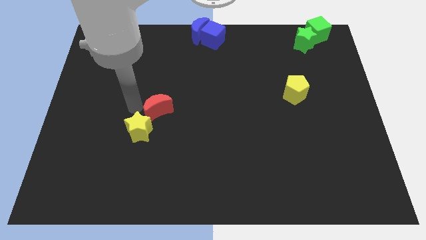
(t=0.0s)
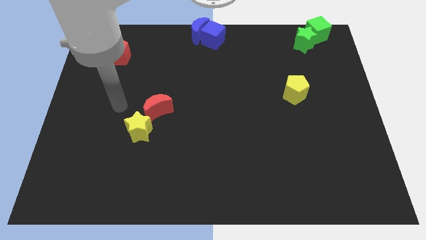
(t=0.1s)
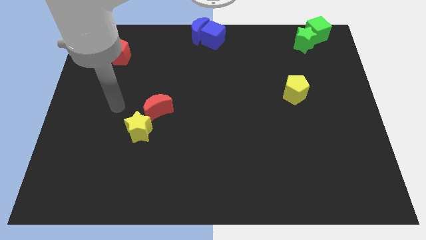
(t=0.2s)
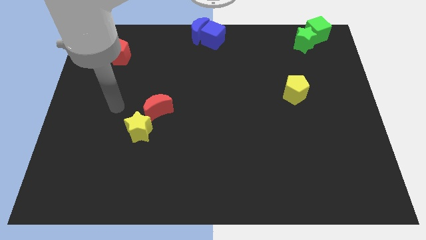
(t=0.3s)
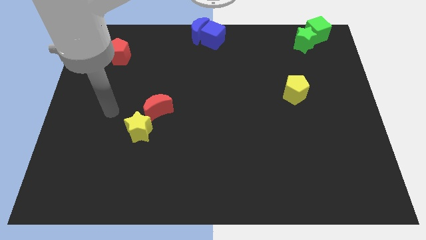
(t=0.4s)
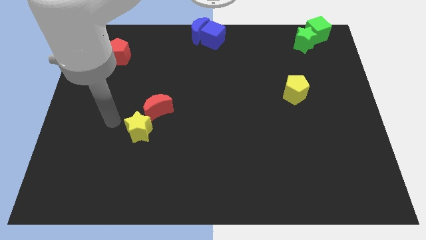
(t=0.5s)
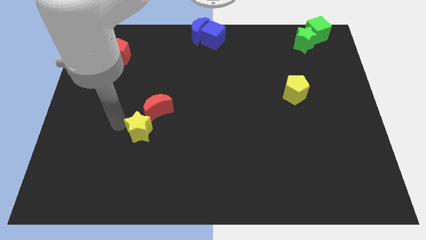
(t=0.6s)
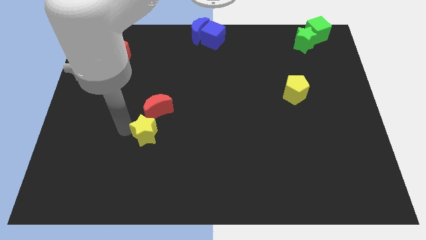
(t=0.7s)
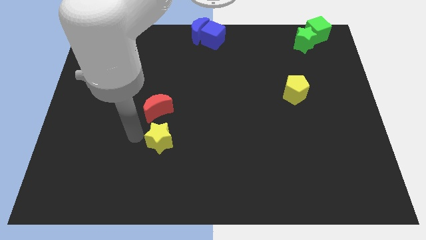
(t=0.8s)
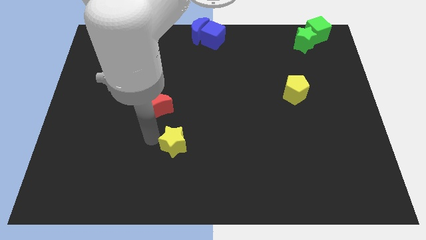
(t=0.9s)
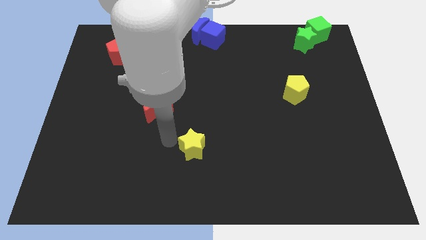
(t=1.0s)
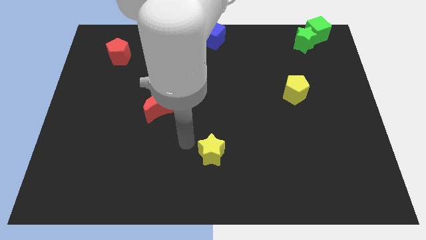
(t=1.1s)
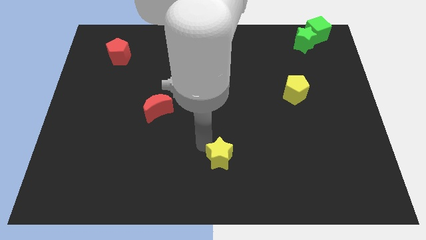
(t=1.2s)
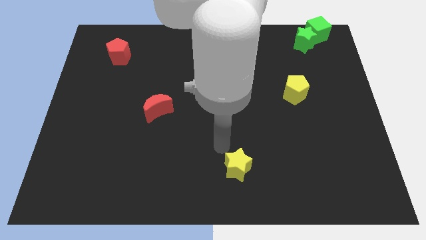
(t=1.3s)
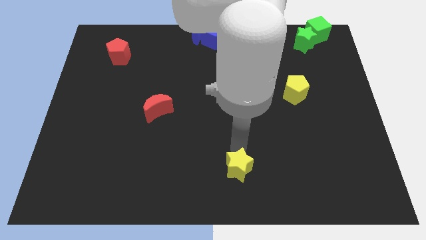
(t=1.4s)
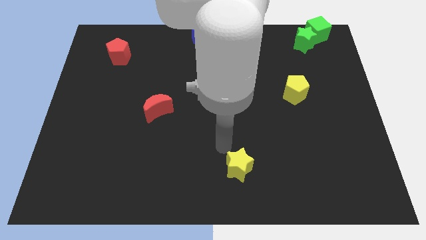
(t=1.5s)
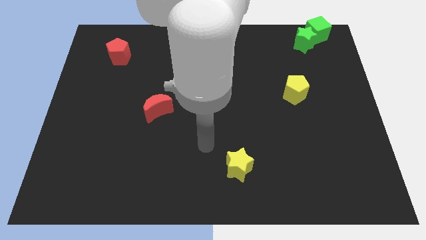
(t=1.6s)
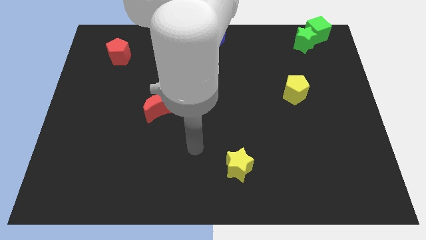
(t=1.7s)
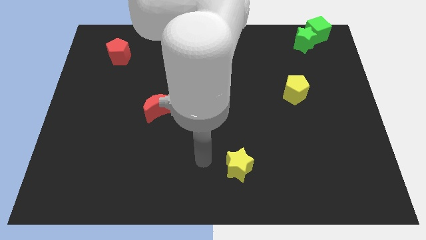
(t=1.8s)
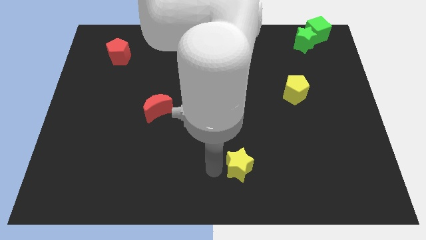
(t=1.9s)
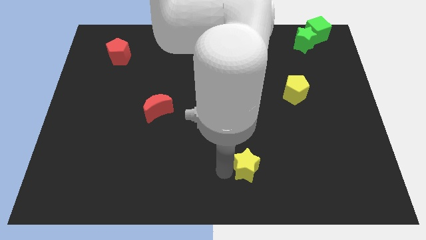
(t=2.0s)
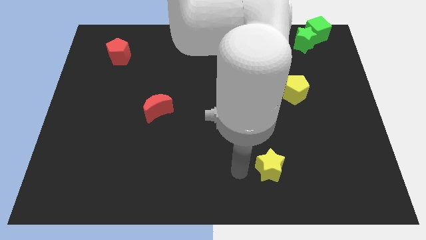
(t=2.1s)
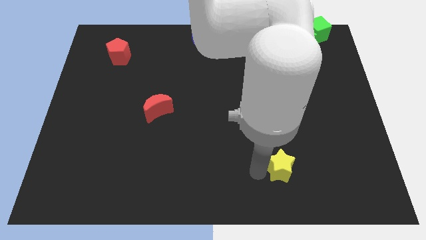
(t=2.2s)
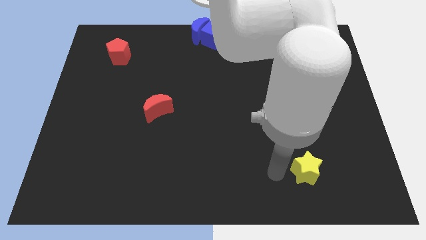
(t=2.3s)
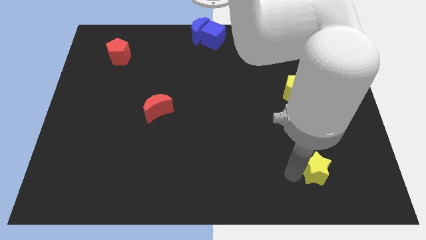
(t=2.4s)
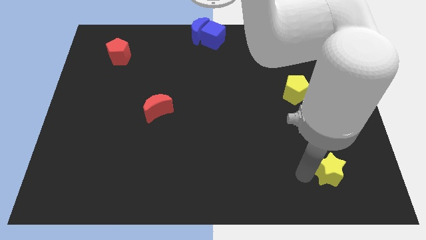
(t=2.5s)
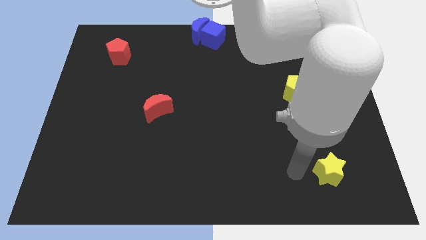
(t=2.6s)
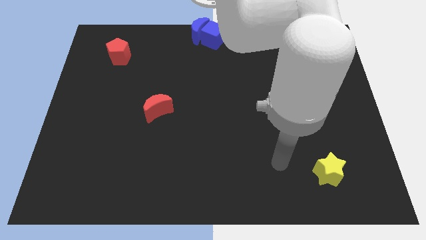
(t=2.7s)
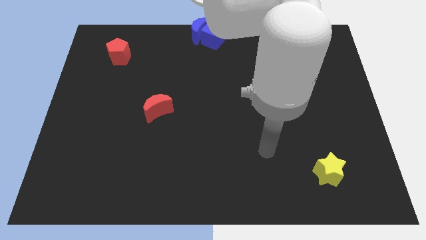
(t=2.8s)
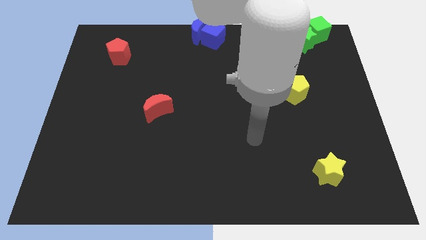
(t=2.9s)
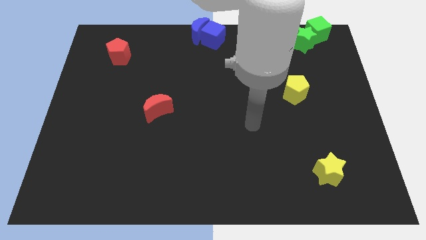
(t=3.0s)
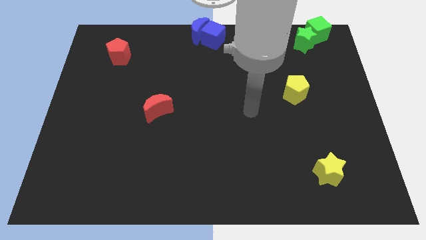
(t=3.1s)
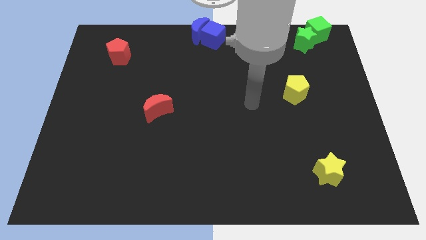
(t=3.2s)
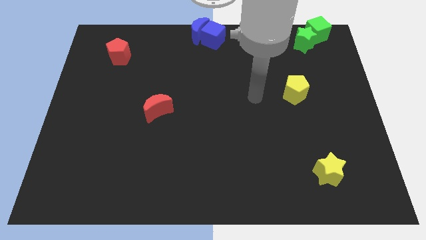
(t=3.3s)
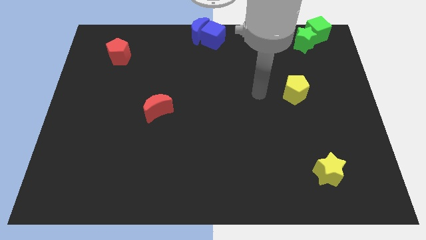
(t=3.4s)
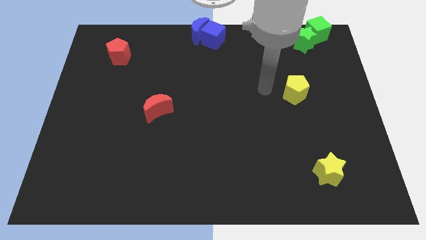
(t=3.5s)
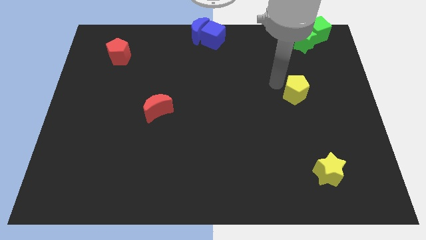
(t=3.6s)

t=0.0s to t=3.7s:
separate the yellow star from the red moon

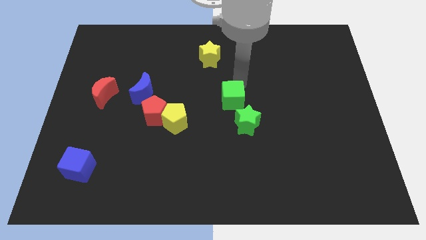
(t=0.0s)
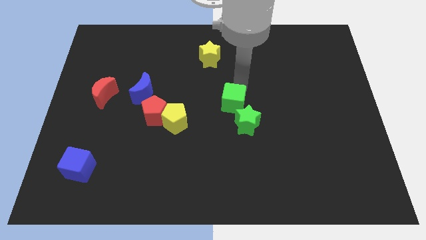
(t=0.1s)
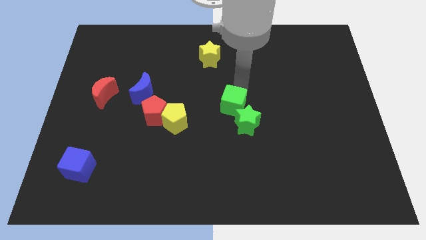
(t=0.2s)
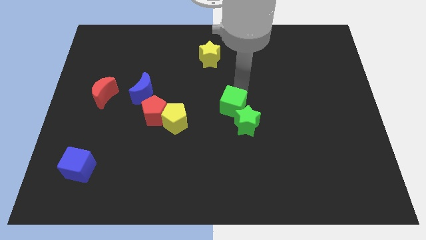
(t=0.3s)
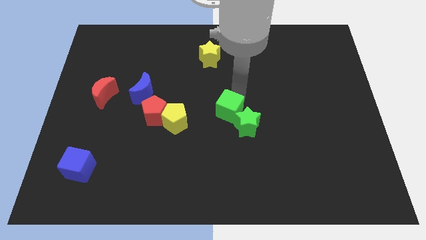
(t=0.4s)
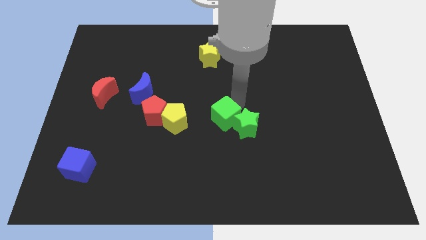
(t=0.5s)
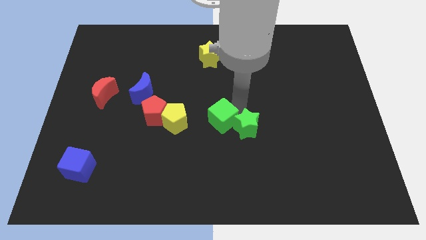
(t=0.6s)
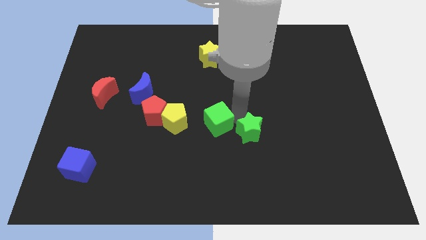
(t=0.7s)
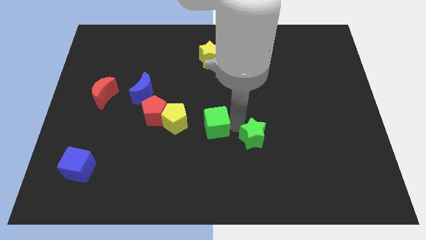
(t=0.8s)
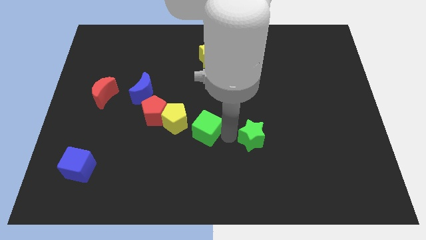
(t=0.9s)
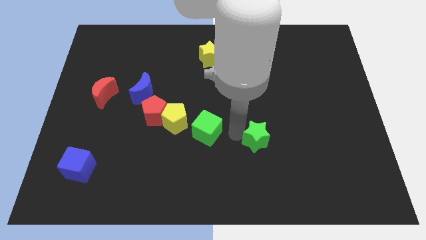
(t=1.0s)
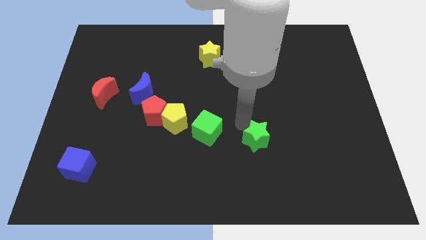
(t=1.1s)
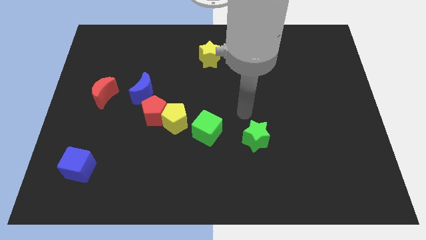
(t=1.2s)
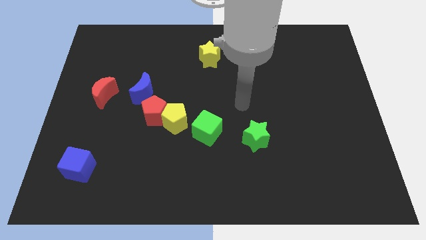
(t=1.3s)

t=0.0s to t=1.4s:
separate the green cube and green star

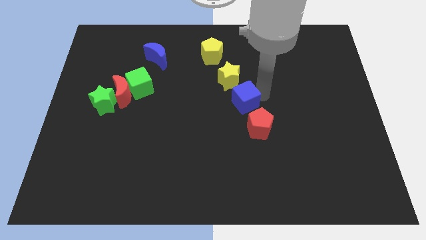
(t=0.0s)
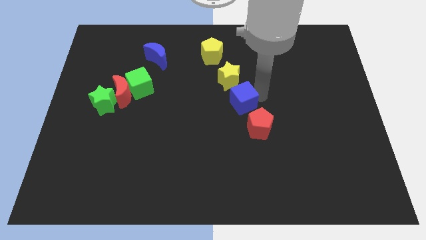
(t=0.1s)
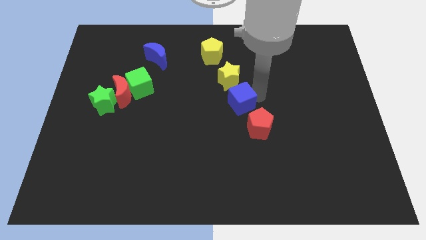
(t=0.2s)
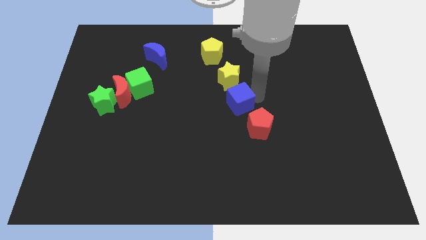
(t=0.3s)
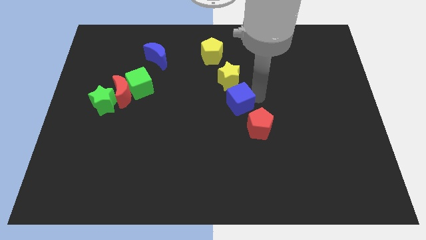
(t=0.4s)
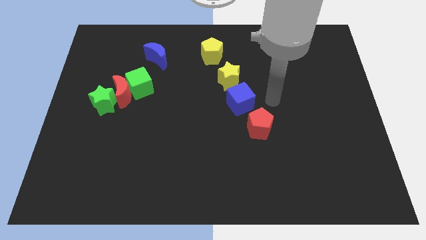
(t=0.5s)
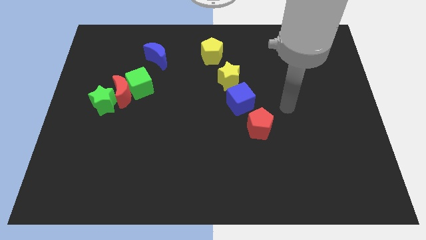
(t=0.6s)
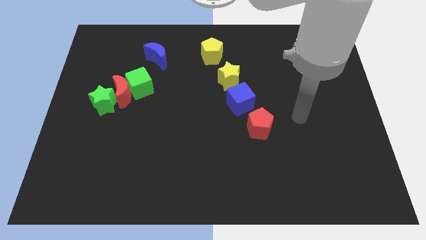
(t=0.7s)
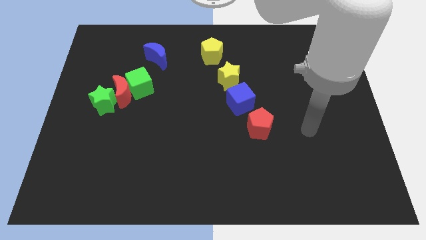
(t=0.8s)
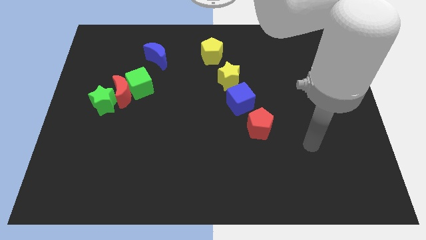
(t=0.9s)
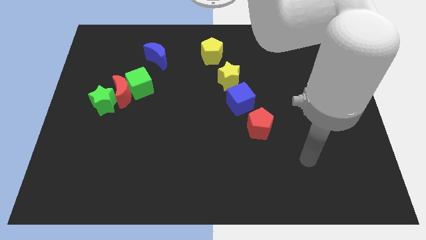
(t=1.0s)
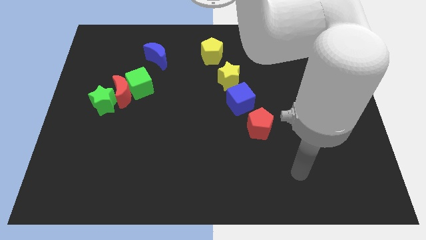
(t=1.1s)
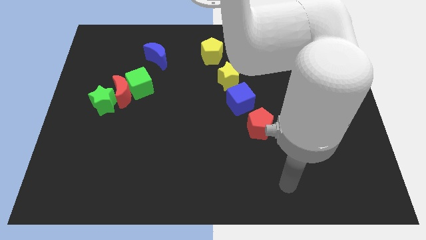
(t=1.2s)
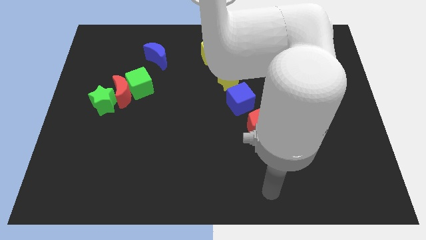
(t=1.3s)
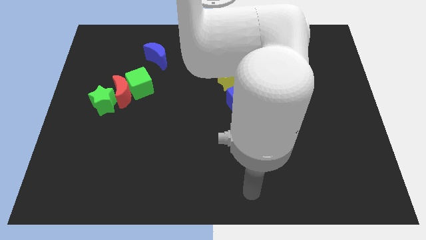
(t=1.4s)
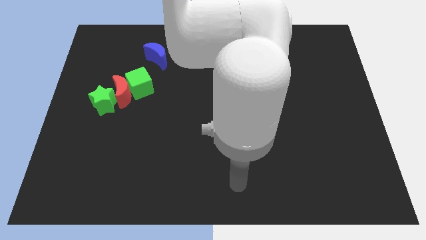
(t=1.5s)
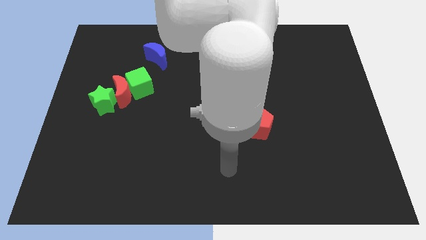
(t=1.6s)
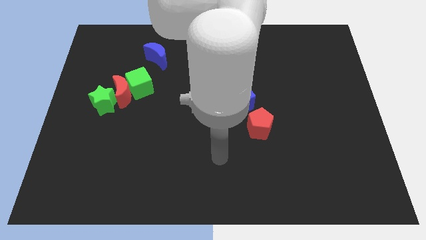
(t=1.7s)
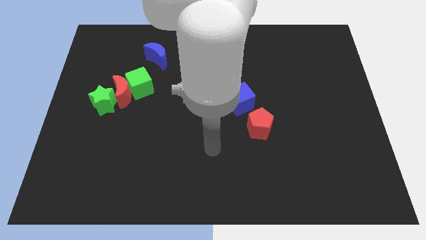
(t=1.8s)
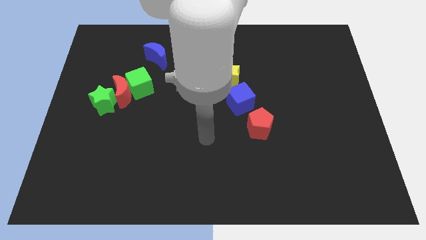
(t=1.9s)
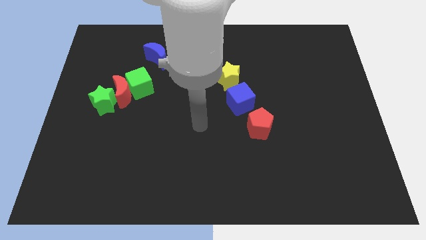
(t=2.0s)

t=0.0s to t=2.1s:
slightly drag the blue cube towards left

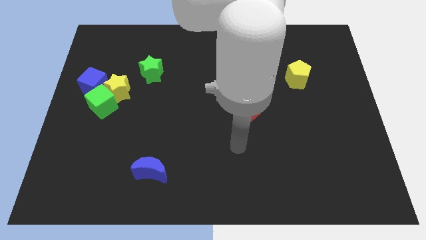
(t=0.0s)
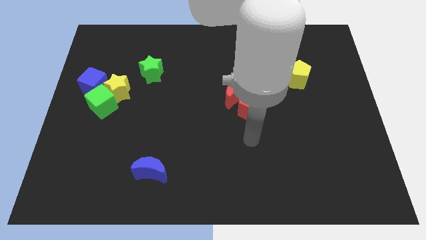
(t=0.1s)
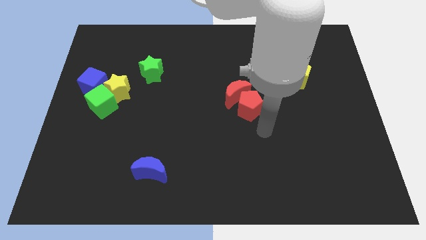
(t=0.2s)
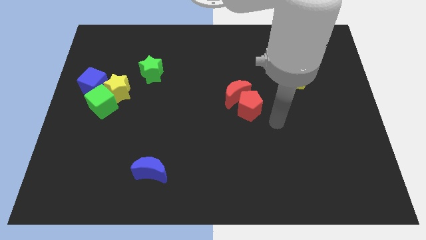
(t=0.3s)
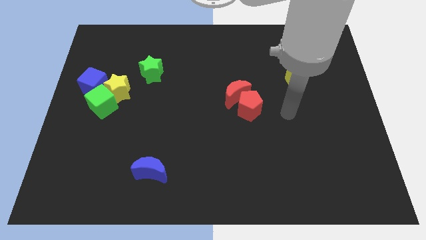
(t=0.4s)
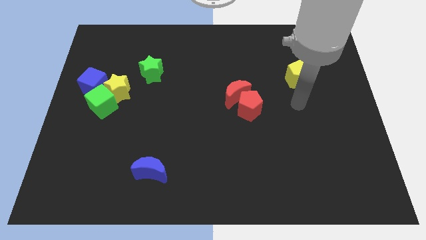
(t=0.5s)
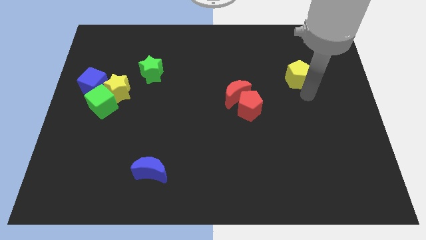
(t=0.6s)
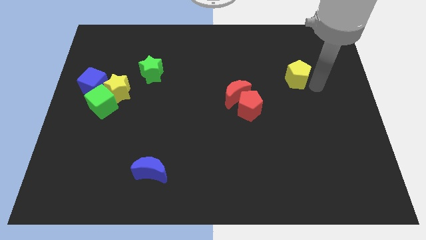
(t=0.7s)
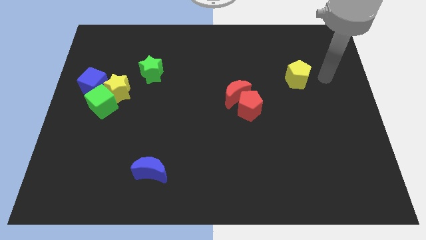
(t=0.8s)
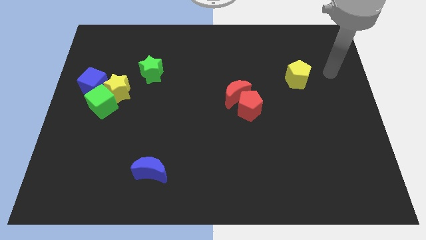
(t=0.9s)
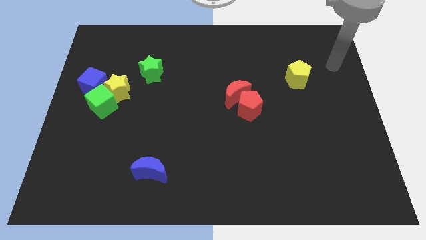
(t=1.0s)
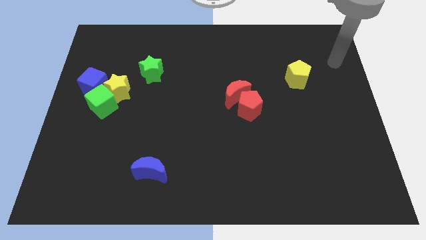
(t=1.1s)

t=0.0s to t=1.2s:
move your hand towards top right corner

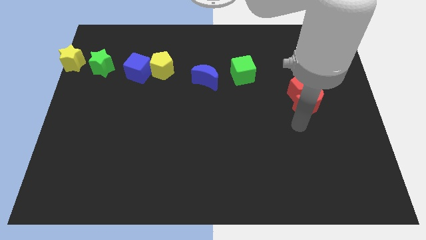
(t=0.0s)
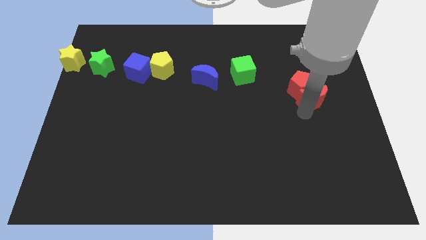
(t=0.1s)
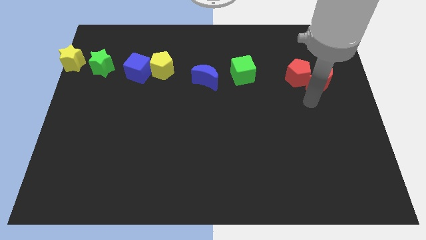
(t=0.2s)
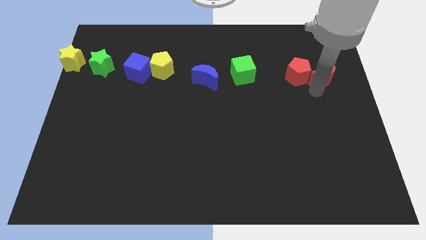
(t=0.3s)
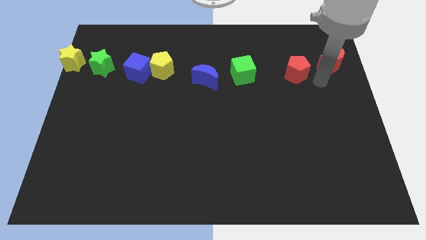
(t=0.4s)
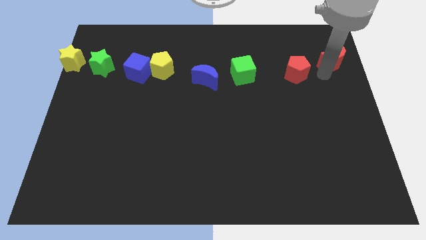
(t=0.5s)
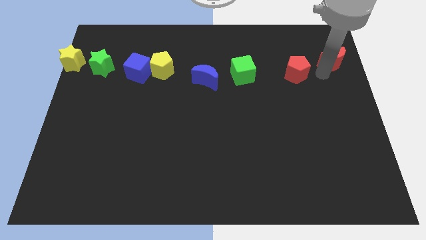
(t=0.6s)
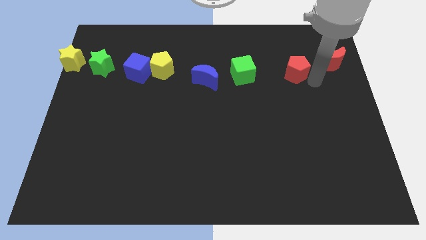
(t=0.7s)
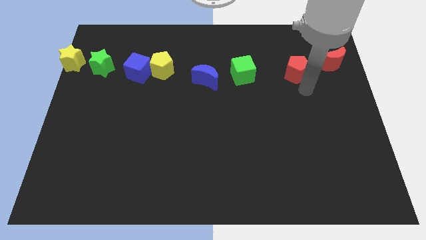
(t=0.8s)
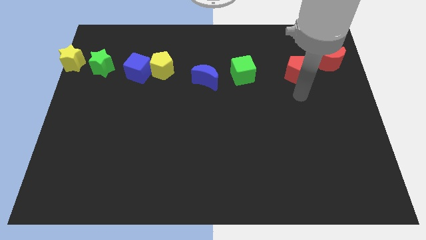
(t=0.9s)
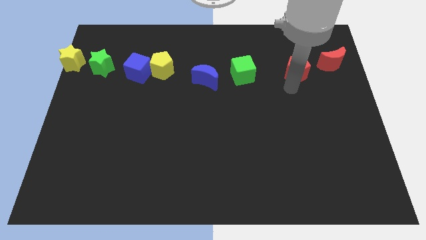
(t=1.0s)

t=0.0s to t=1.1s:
move the red crescent to the right of the red pentagon
